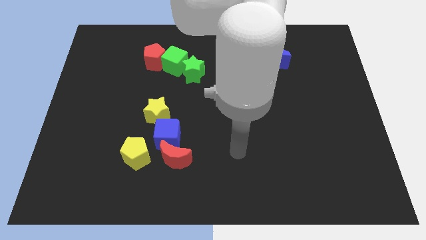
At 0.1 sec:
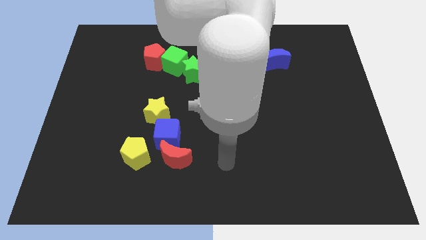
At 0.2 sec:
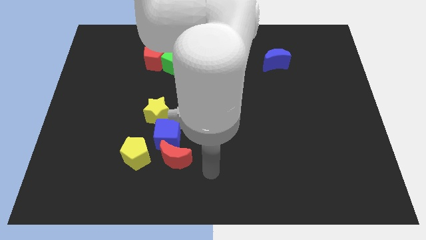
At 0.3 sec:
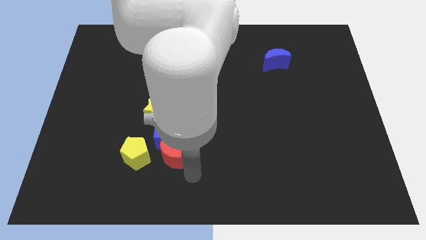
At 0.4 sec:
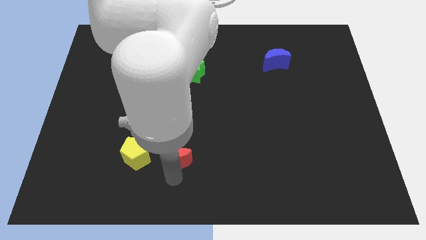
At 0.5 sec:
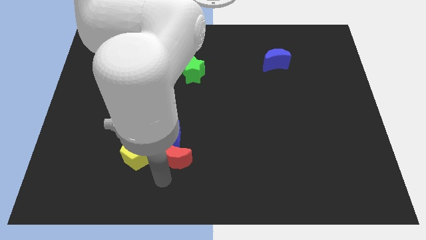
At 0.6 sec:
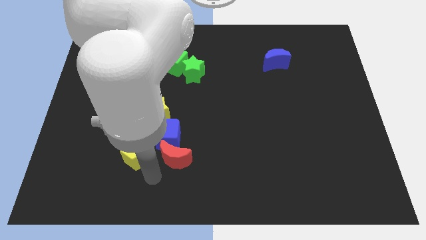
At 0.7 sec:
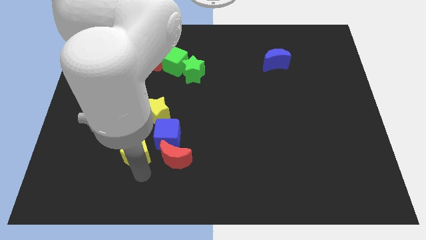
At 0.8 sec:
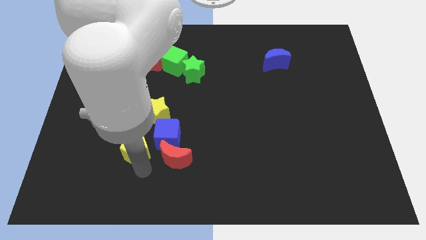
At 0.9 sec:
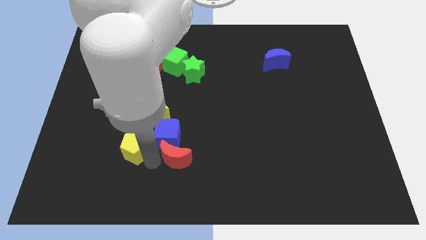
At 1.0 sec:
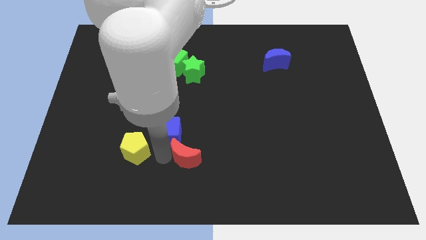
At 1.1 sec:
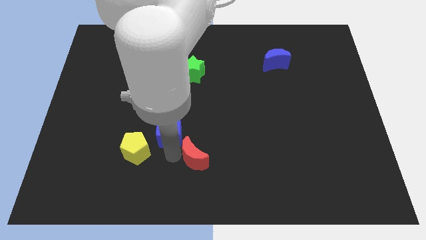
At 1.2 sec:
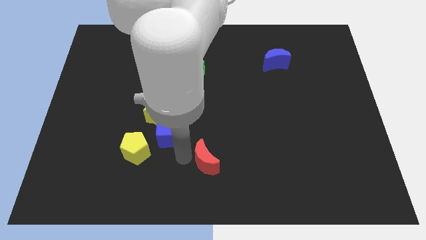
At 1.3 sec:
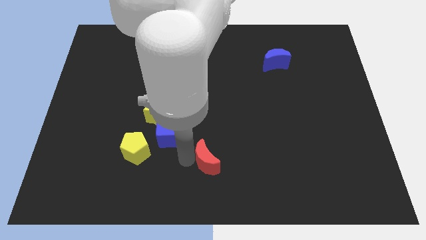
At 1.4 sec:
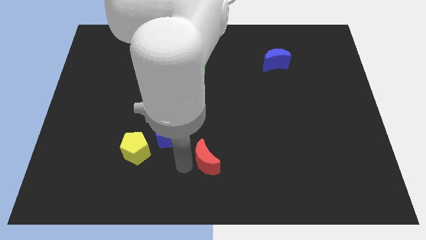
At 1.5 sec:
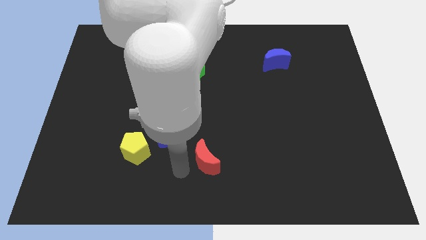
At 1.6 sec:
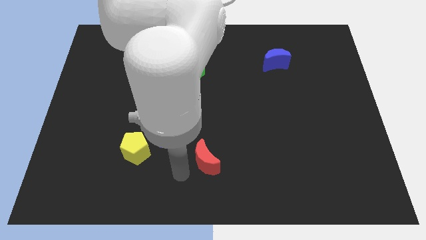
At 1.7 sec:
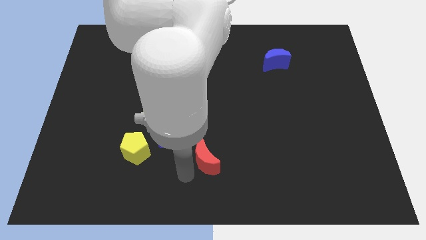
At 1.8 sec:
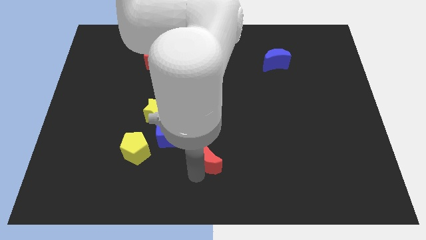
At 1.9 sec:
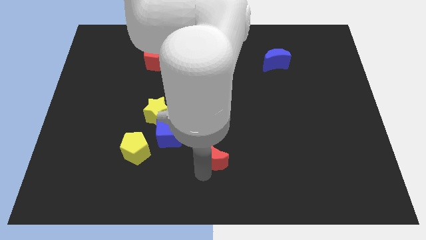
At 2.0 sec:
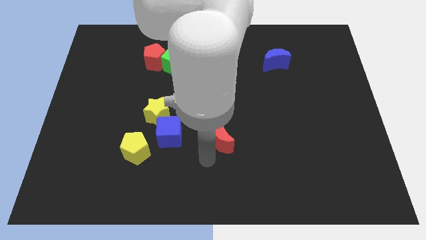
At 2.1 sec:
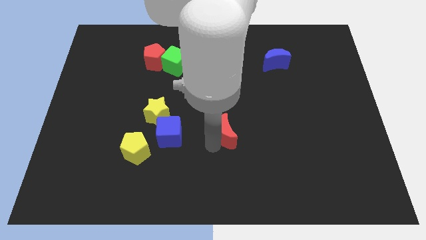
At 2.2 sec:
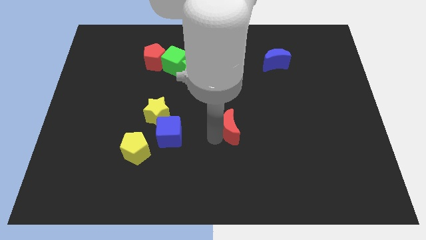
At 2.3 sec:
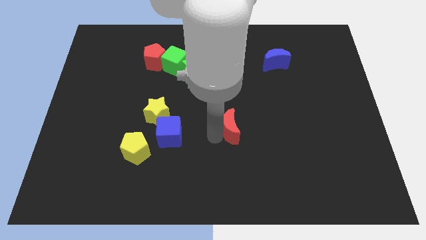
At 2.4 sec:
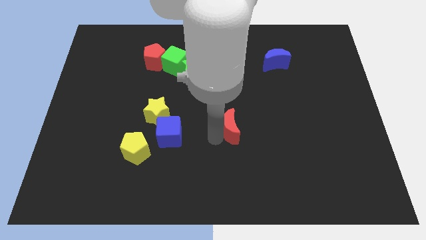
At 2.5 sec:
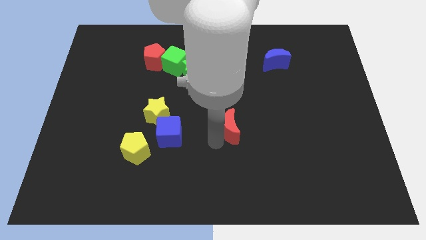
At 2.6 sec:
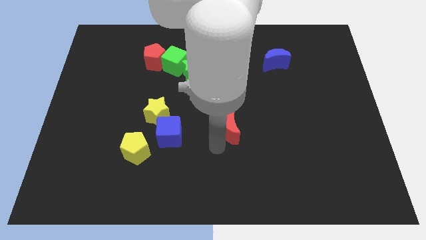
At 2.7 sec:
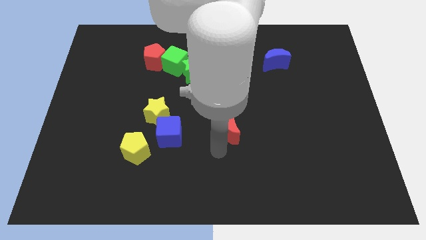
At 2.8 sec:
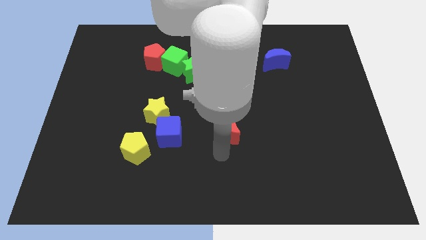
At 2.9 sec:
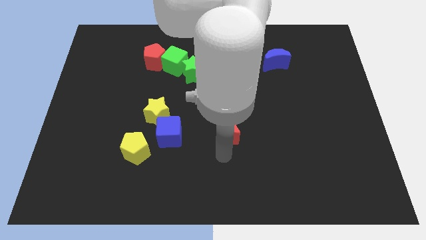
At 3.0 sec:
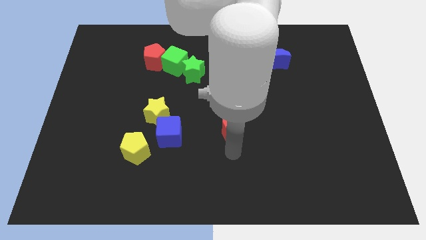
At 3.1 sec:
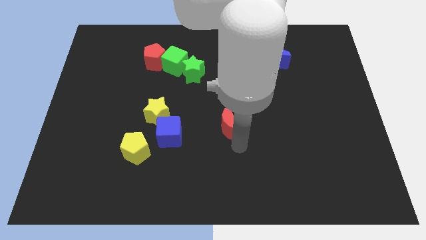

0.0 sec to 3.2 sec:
separate the red crescent from the blue cube

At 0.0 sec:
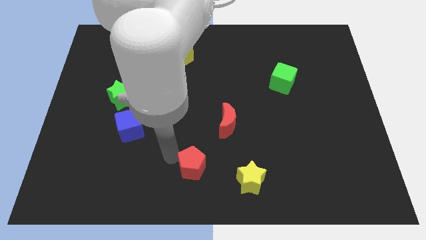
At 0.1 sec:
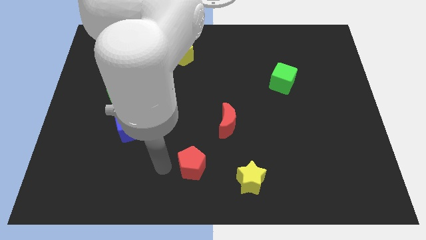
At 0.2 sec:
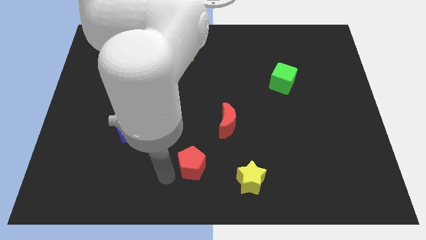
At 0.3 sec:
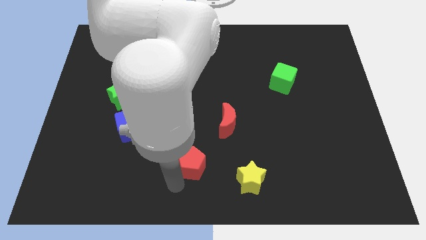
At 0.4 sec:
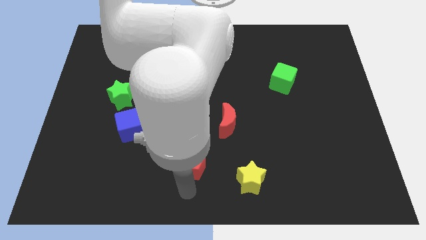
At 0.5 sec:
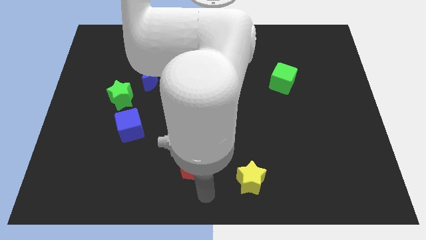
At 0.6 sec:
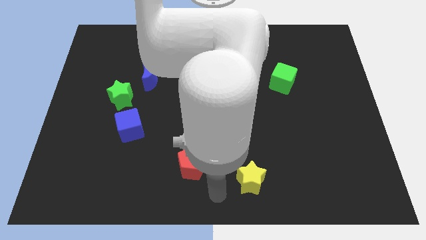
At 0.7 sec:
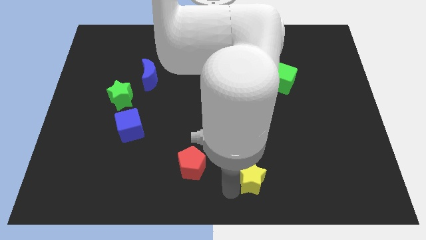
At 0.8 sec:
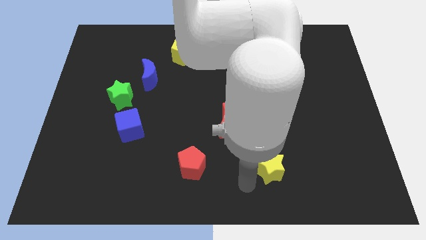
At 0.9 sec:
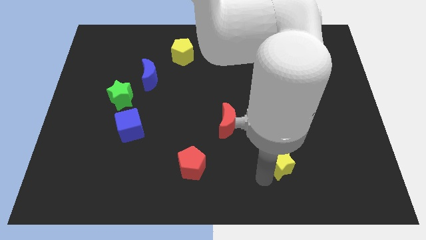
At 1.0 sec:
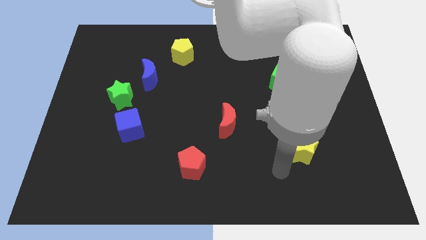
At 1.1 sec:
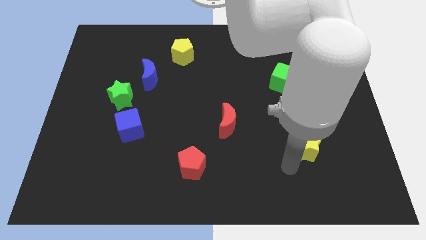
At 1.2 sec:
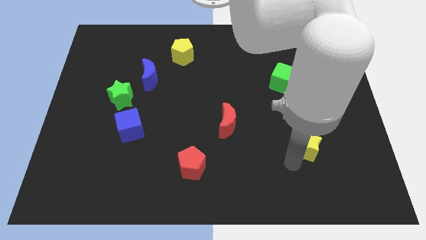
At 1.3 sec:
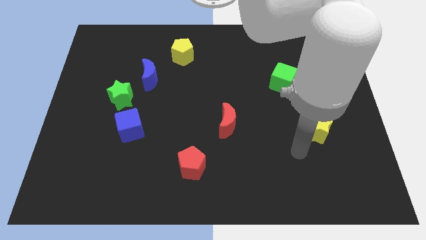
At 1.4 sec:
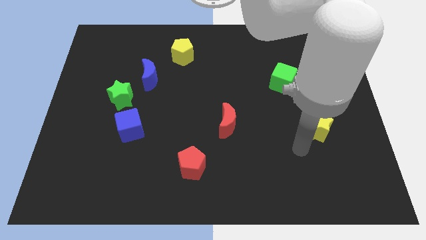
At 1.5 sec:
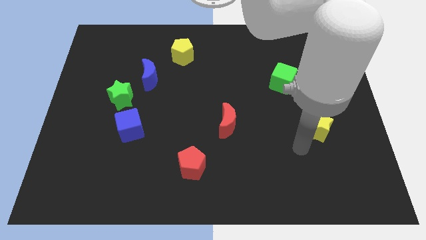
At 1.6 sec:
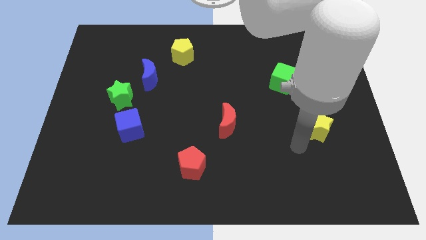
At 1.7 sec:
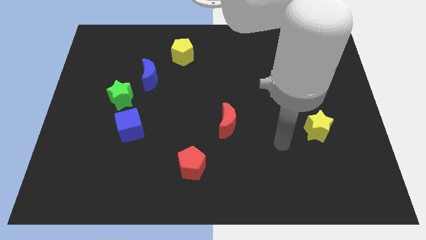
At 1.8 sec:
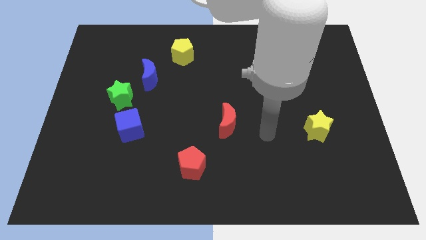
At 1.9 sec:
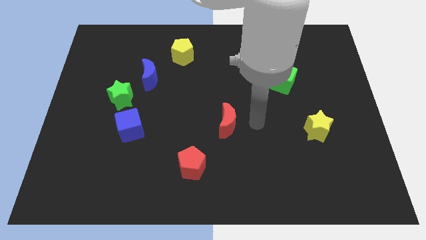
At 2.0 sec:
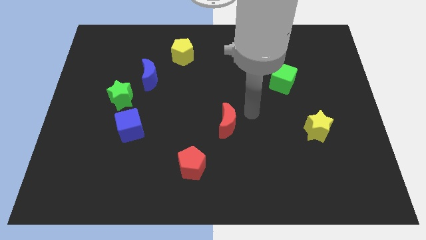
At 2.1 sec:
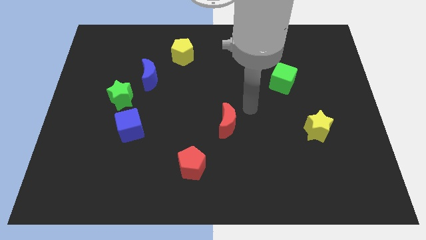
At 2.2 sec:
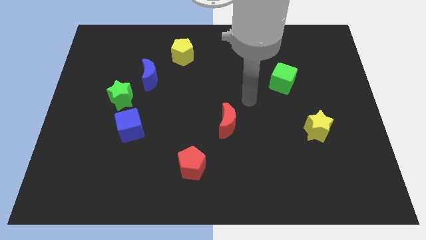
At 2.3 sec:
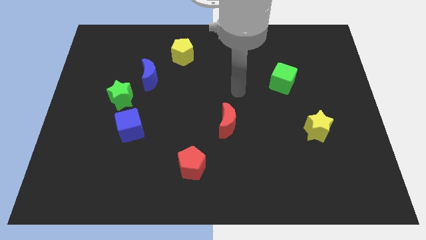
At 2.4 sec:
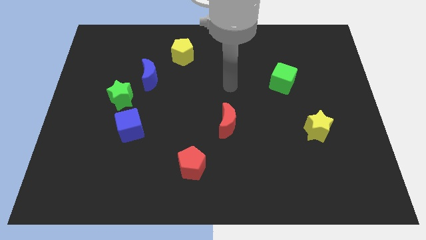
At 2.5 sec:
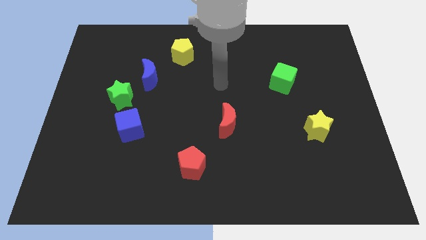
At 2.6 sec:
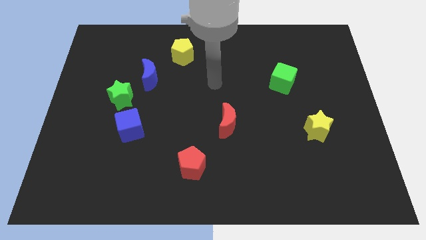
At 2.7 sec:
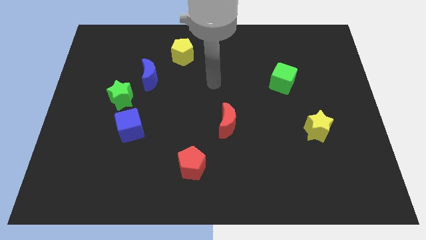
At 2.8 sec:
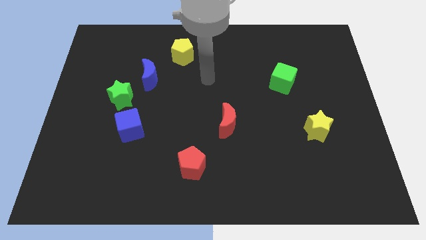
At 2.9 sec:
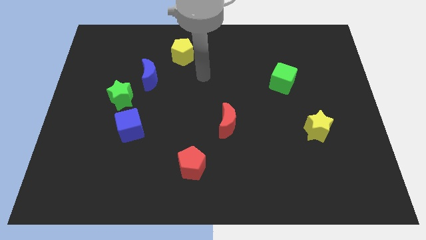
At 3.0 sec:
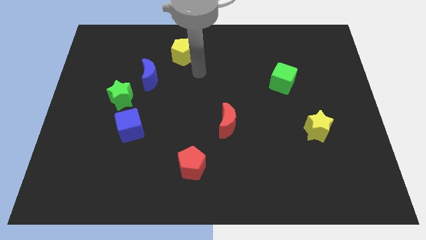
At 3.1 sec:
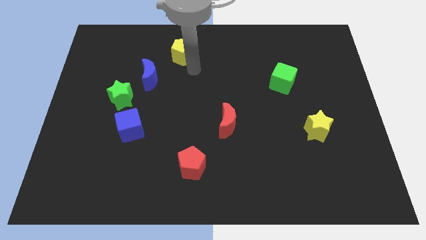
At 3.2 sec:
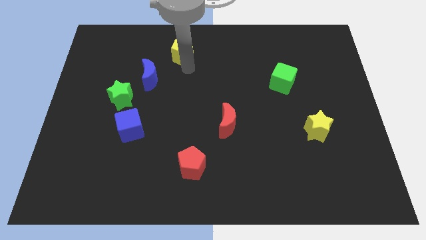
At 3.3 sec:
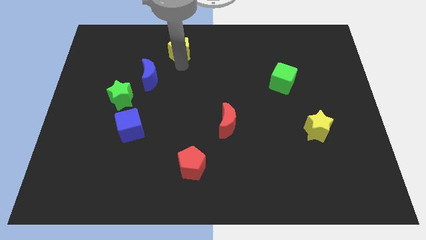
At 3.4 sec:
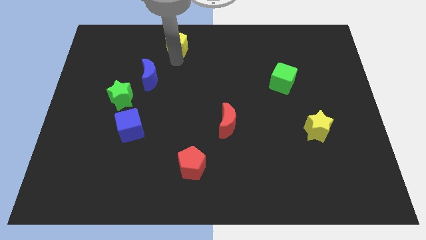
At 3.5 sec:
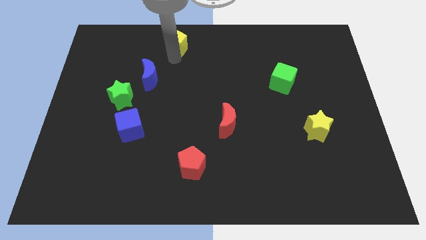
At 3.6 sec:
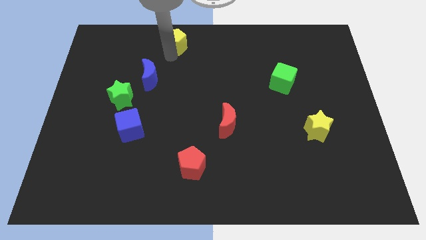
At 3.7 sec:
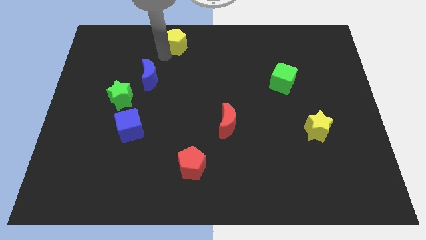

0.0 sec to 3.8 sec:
move the yellow star towards the center right

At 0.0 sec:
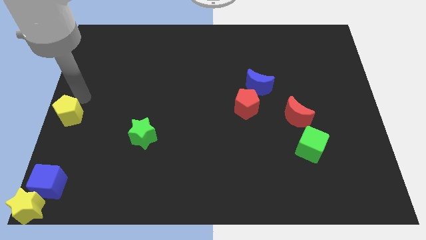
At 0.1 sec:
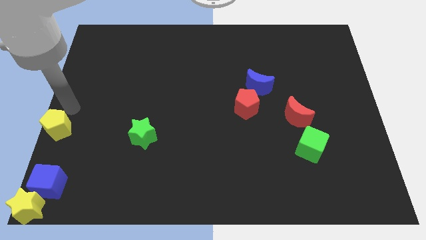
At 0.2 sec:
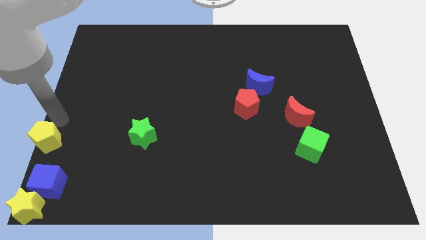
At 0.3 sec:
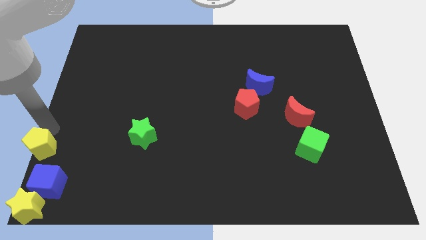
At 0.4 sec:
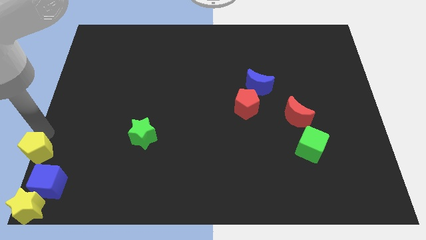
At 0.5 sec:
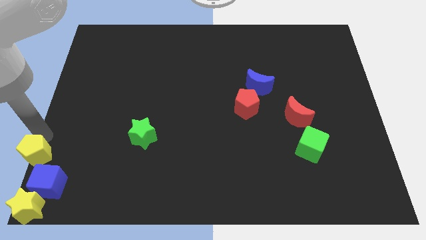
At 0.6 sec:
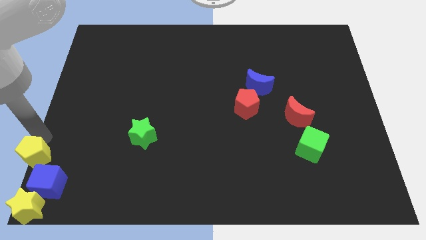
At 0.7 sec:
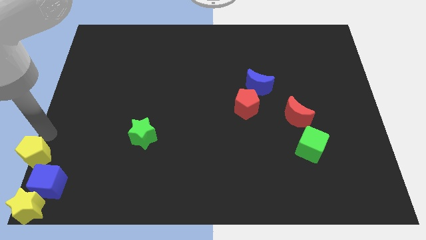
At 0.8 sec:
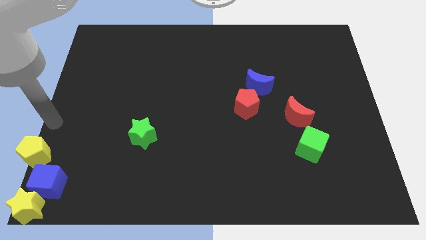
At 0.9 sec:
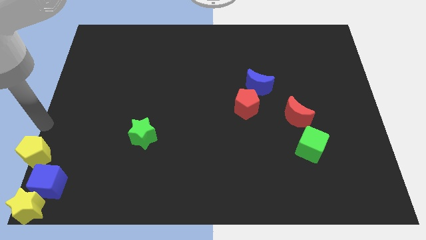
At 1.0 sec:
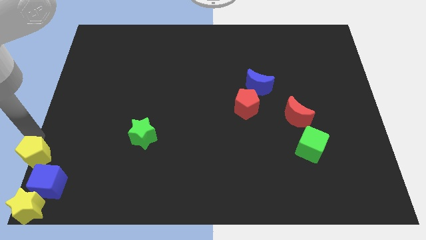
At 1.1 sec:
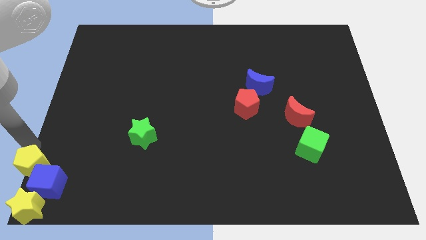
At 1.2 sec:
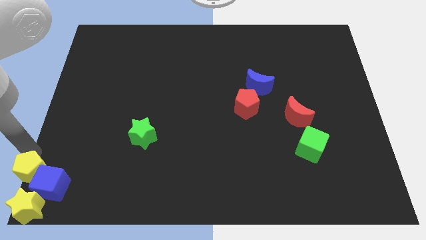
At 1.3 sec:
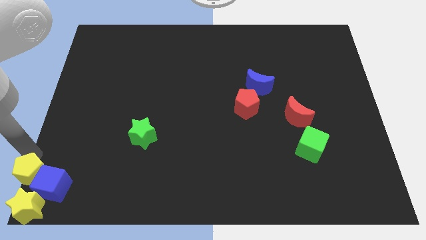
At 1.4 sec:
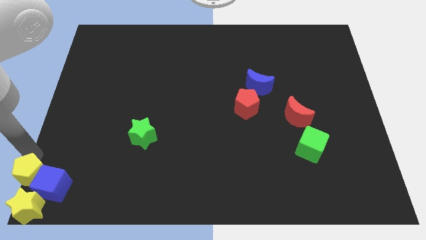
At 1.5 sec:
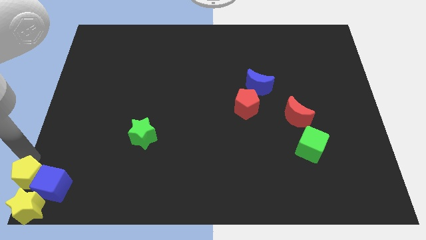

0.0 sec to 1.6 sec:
move the yellow pentagon into the blue cube

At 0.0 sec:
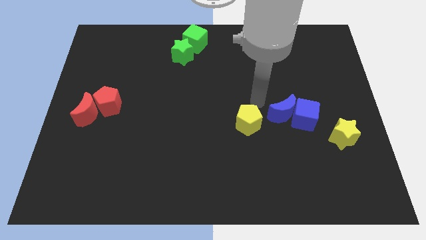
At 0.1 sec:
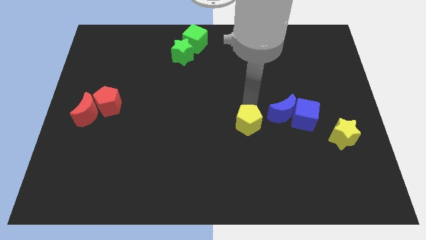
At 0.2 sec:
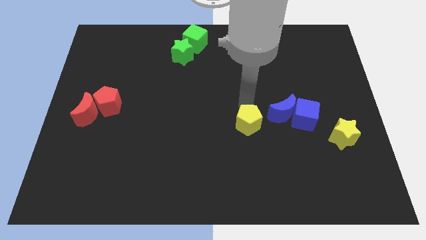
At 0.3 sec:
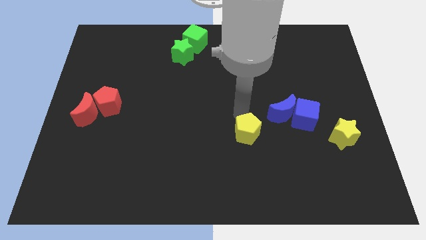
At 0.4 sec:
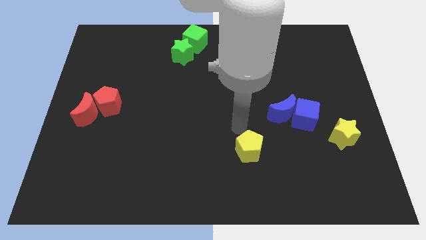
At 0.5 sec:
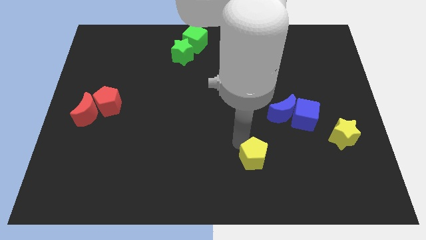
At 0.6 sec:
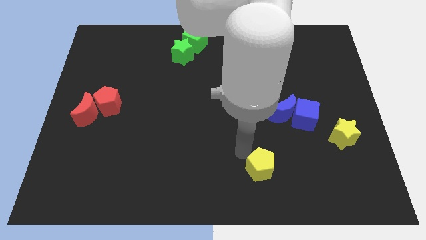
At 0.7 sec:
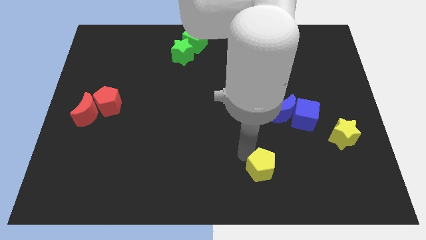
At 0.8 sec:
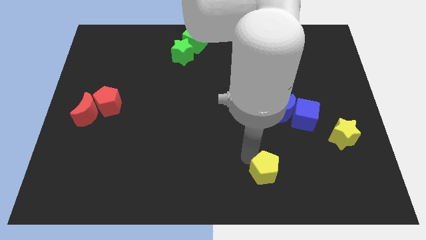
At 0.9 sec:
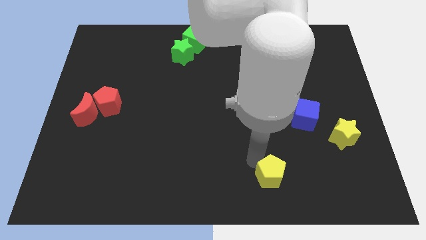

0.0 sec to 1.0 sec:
place the yellow pentagon vertically below the blue crescent
